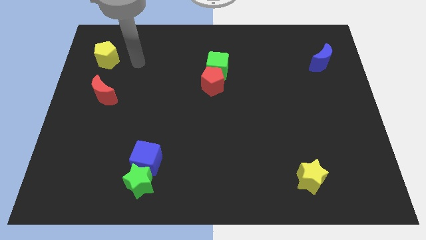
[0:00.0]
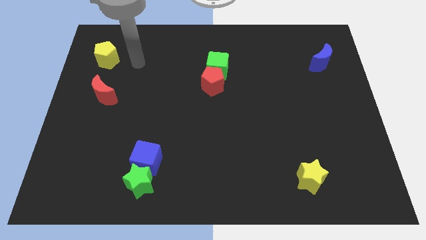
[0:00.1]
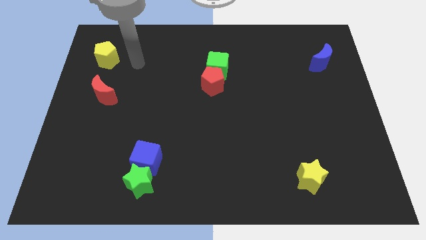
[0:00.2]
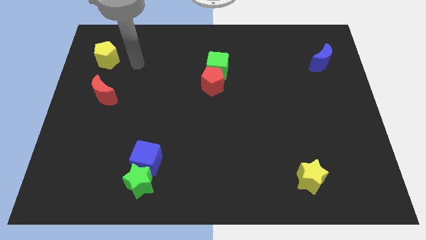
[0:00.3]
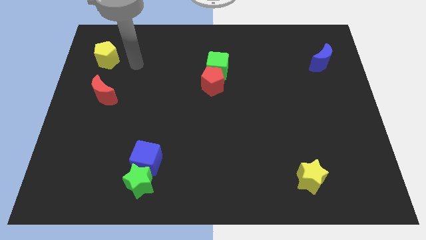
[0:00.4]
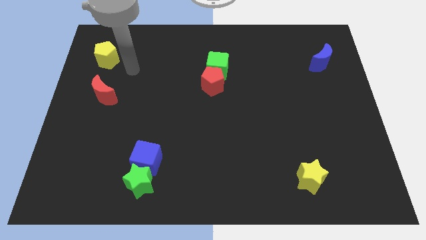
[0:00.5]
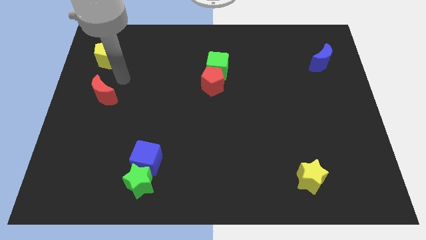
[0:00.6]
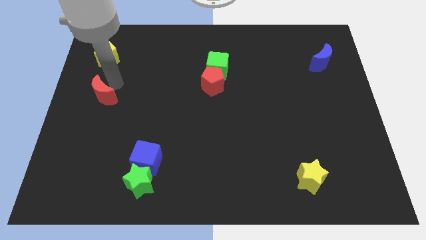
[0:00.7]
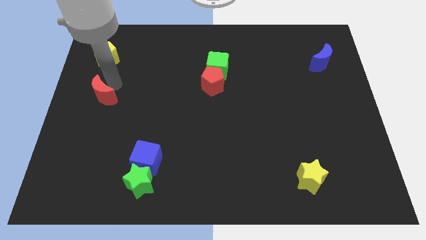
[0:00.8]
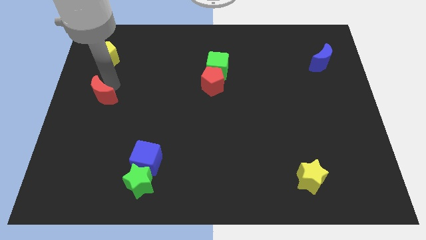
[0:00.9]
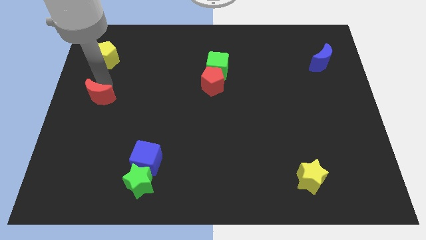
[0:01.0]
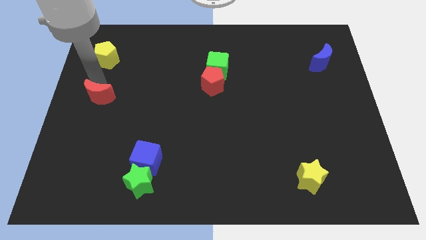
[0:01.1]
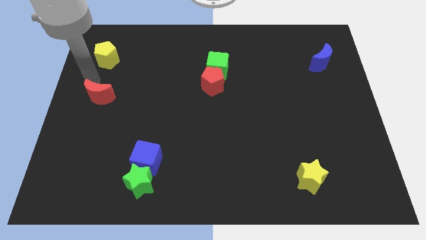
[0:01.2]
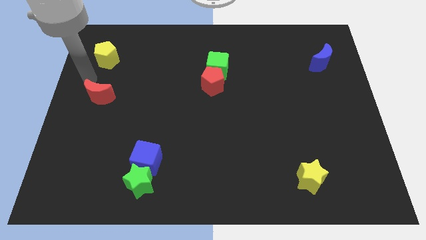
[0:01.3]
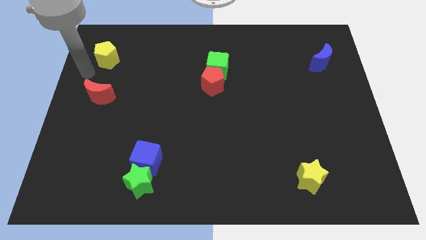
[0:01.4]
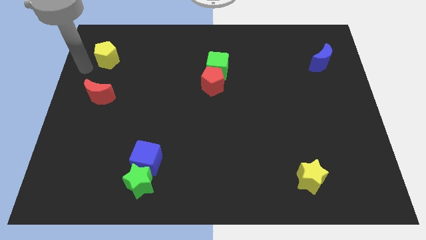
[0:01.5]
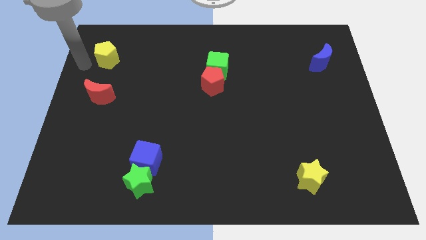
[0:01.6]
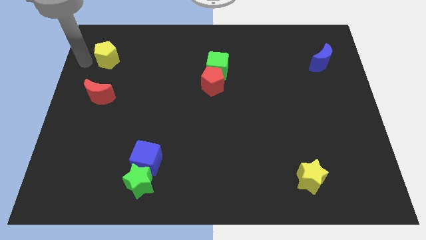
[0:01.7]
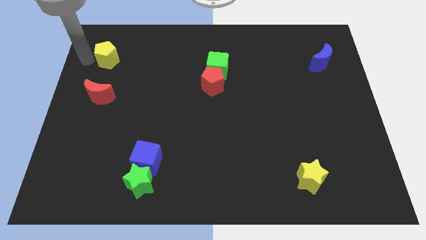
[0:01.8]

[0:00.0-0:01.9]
tap at the top side of the red crescent

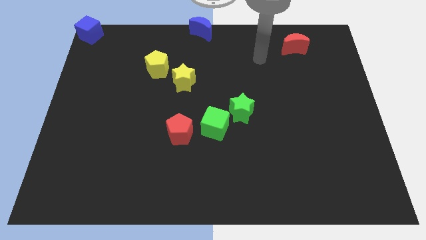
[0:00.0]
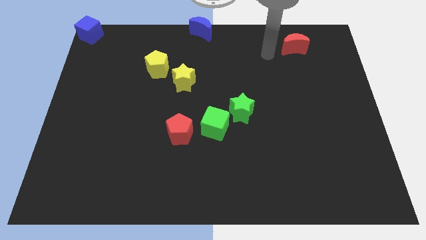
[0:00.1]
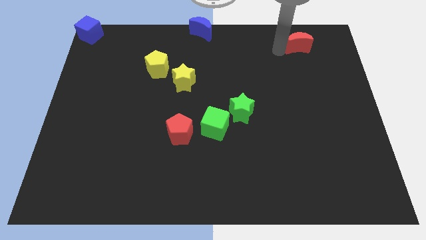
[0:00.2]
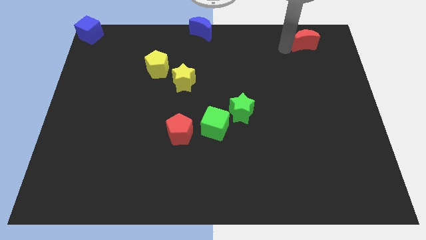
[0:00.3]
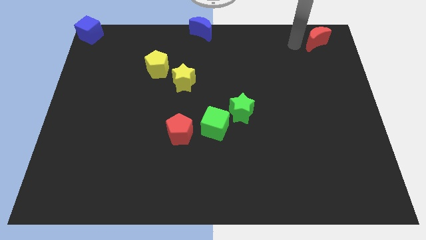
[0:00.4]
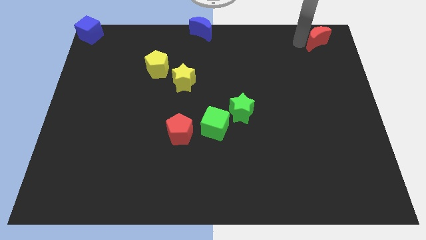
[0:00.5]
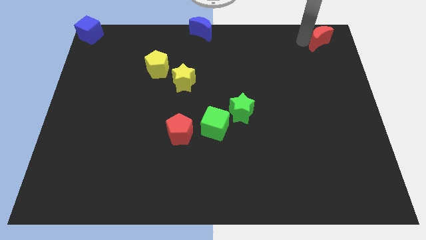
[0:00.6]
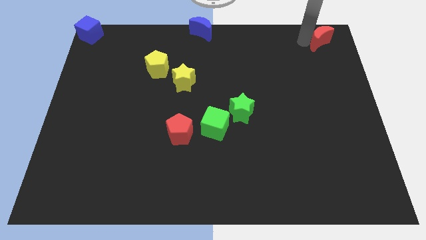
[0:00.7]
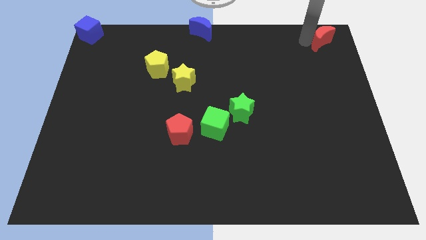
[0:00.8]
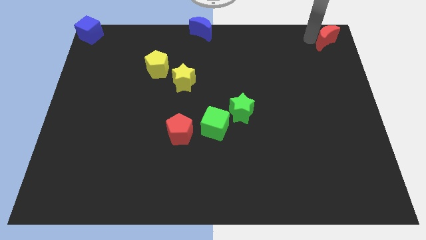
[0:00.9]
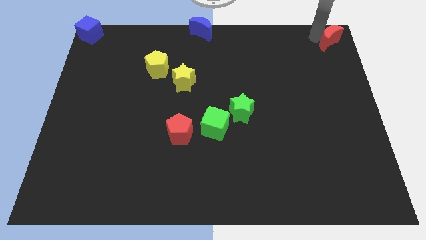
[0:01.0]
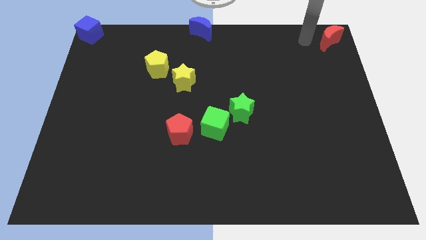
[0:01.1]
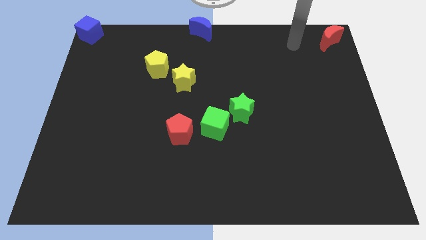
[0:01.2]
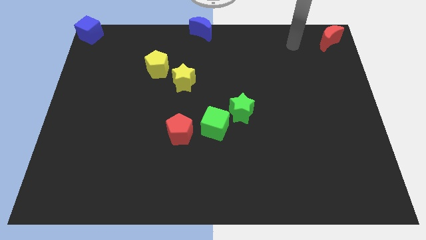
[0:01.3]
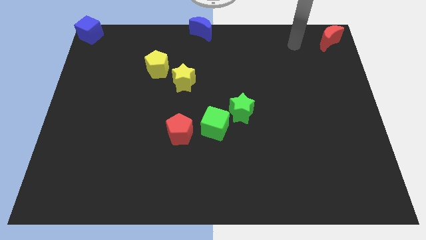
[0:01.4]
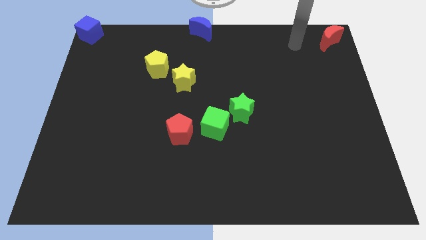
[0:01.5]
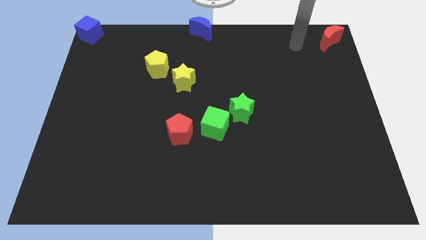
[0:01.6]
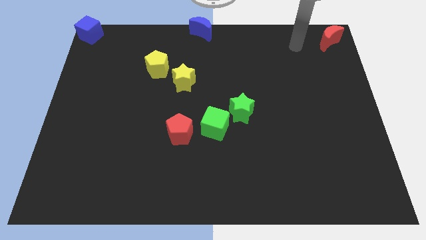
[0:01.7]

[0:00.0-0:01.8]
push the red moon to the top left

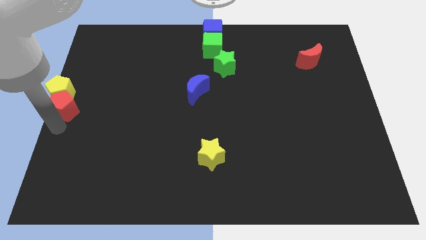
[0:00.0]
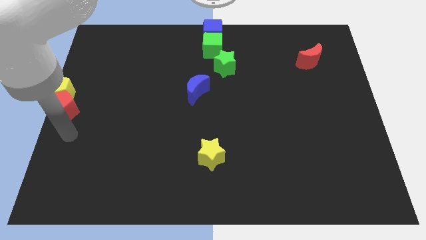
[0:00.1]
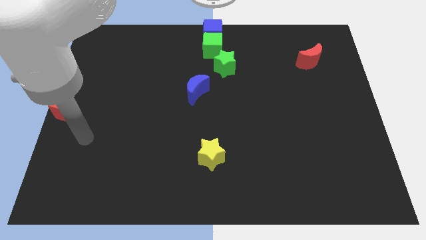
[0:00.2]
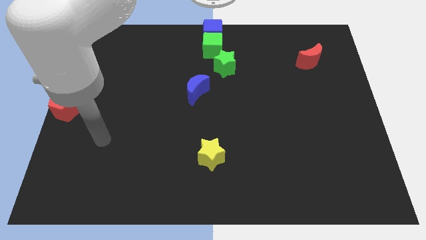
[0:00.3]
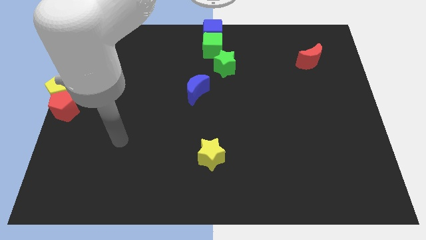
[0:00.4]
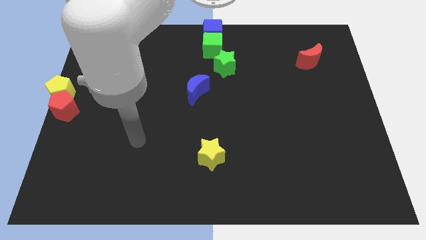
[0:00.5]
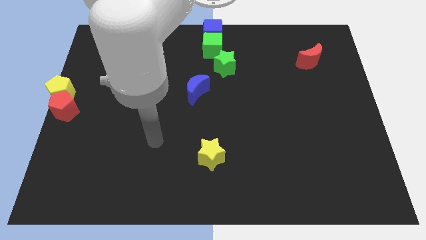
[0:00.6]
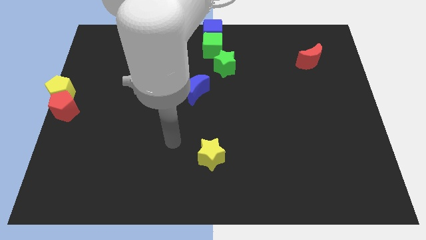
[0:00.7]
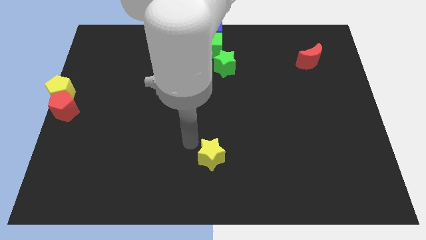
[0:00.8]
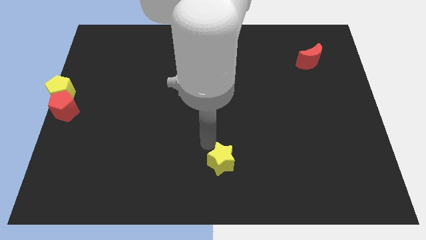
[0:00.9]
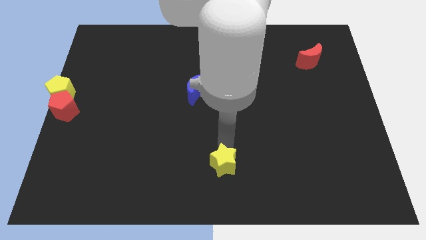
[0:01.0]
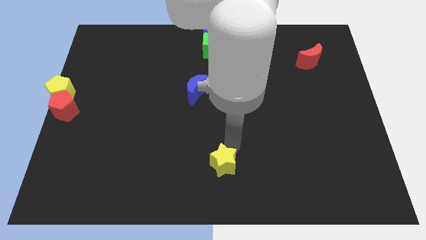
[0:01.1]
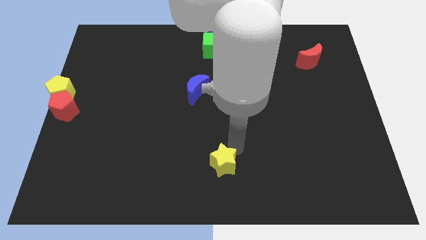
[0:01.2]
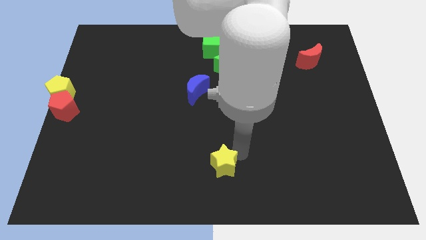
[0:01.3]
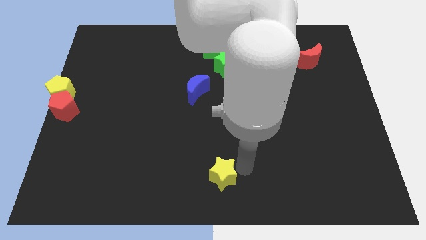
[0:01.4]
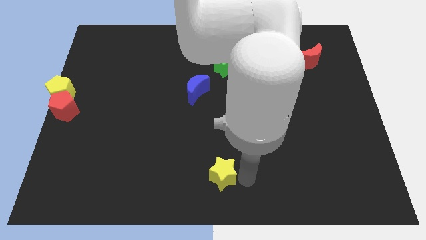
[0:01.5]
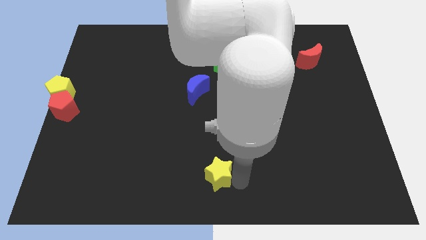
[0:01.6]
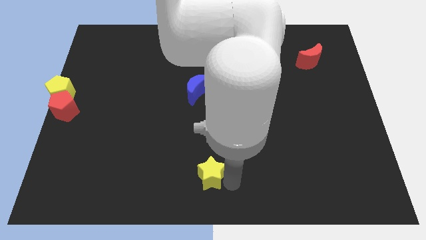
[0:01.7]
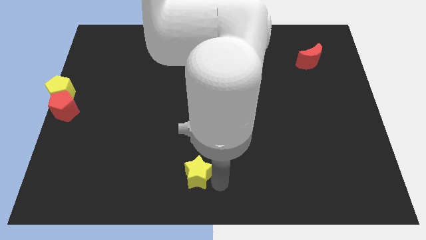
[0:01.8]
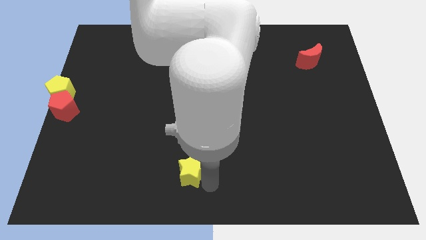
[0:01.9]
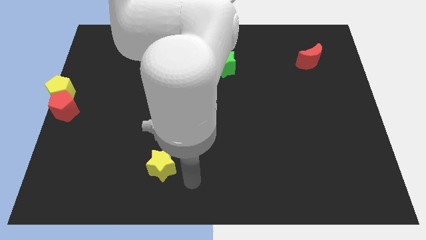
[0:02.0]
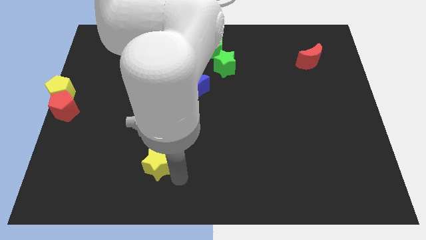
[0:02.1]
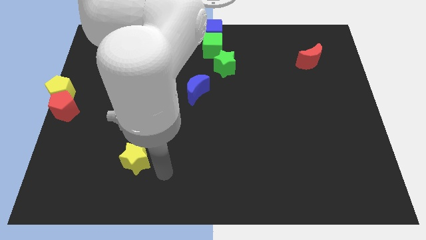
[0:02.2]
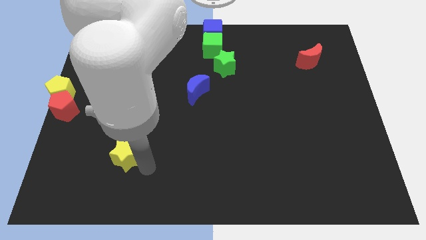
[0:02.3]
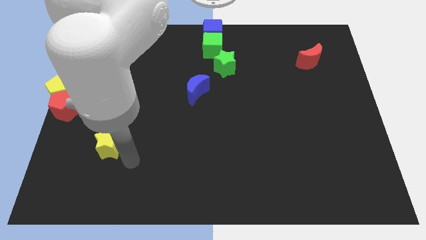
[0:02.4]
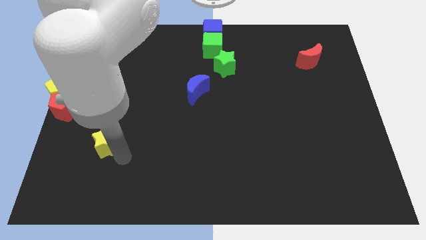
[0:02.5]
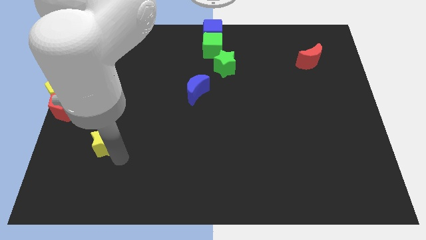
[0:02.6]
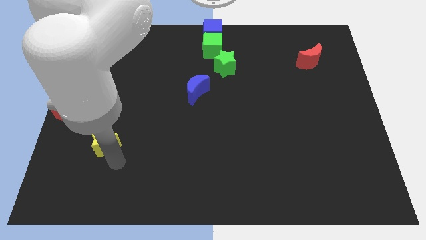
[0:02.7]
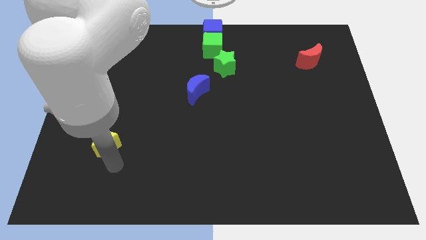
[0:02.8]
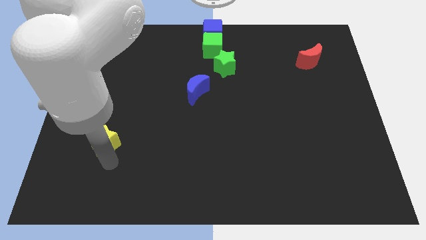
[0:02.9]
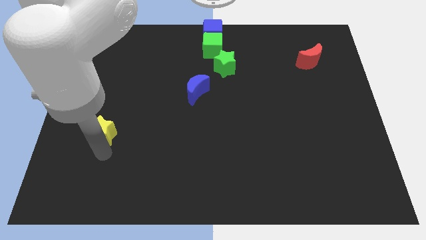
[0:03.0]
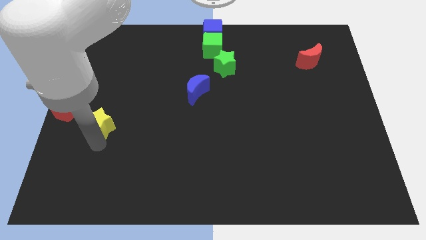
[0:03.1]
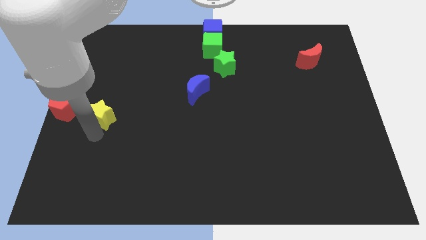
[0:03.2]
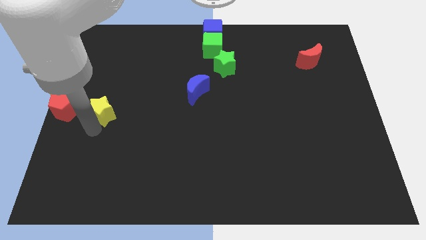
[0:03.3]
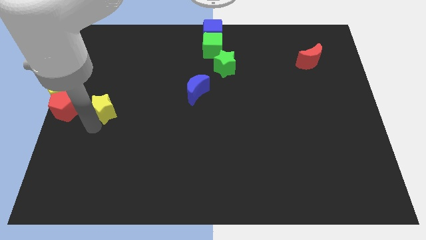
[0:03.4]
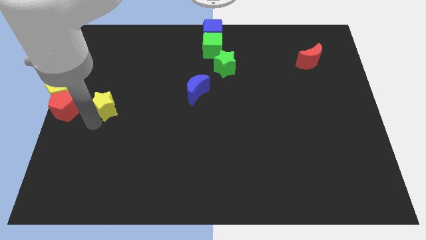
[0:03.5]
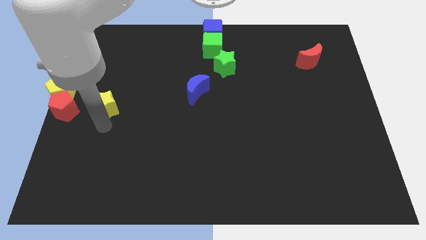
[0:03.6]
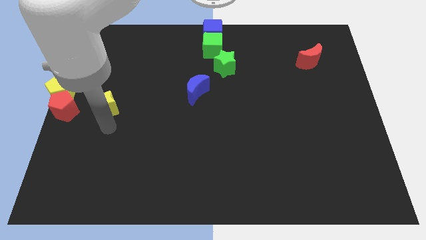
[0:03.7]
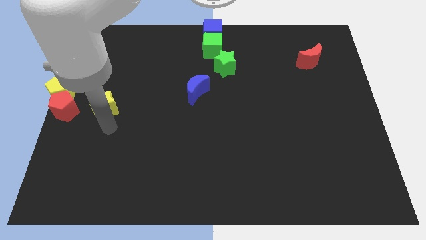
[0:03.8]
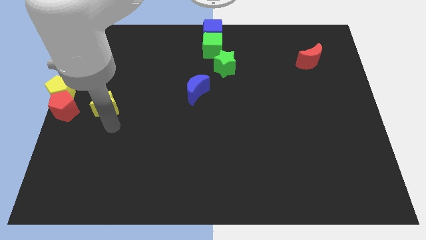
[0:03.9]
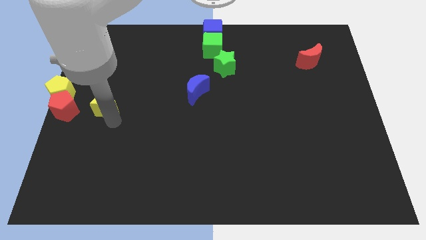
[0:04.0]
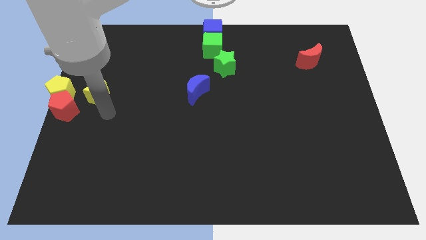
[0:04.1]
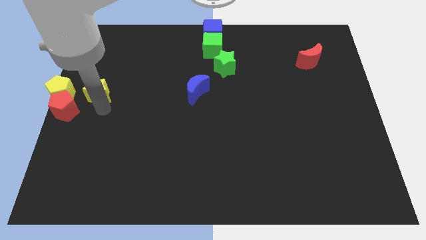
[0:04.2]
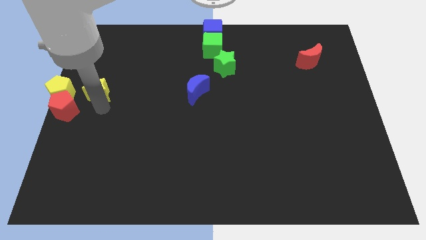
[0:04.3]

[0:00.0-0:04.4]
push yellow star towards yellow pentagon

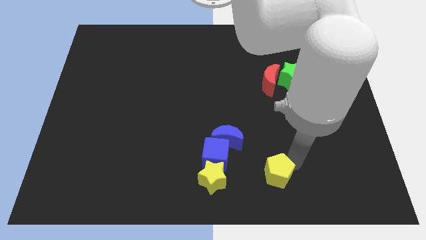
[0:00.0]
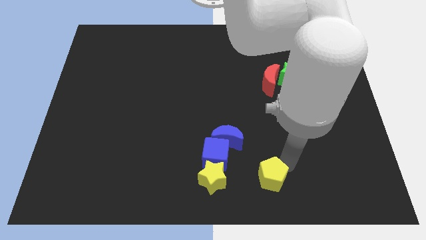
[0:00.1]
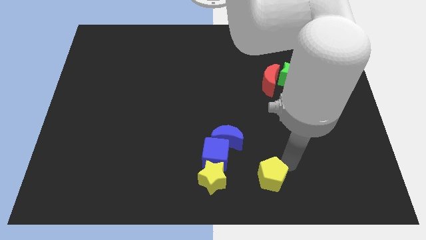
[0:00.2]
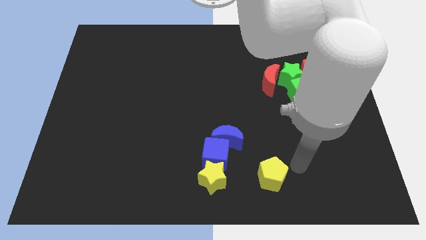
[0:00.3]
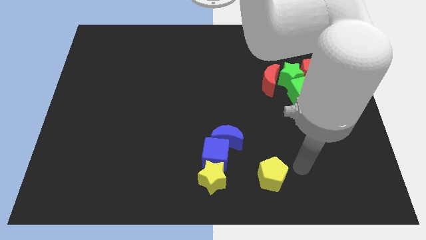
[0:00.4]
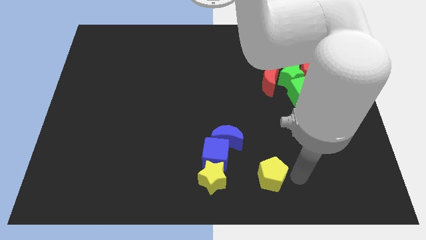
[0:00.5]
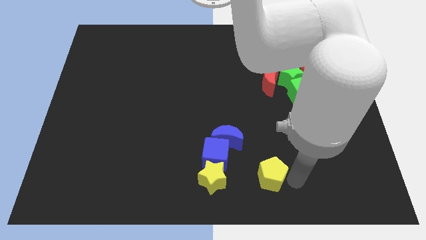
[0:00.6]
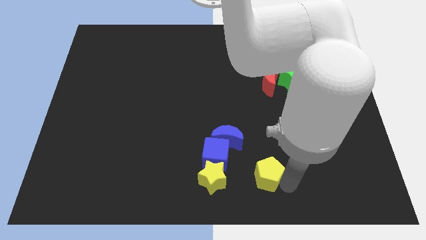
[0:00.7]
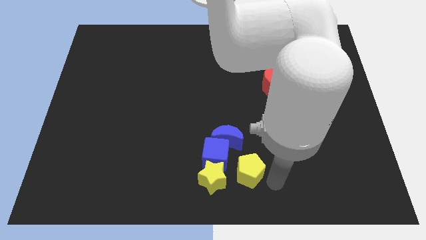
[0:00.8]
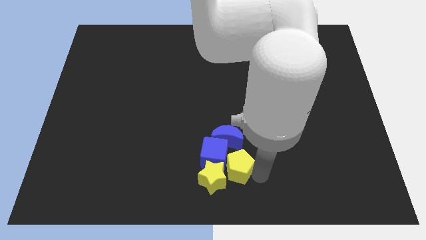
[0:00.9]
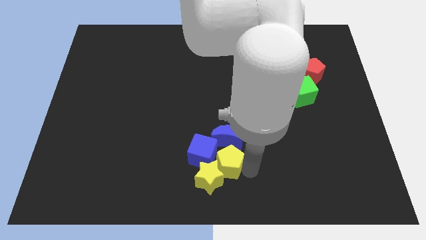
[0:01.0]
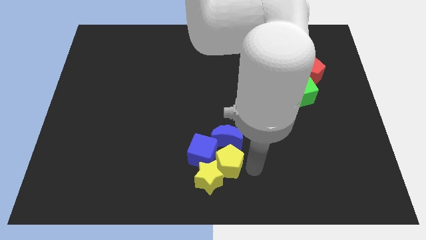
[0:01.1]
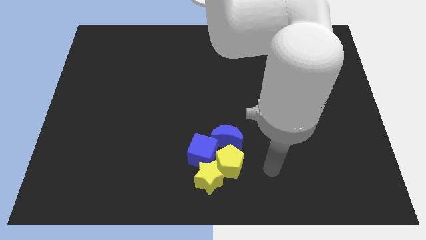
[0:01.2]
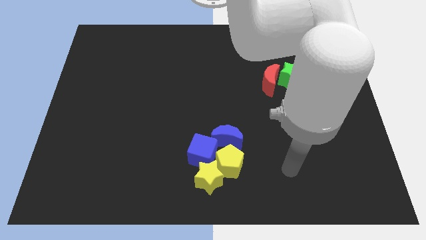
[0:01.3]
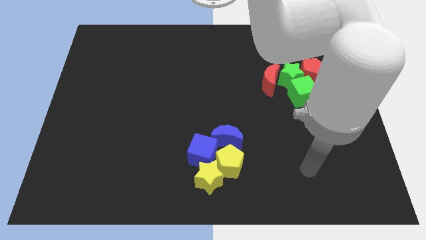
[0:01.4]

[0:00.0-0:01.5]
push the yellow pentagon into the blue cube
